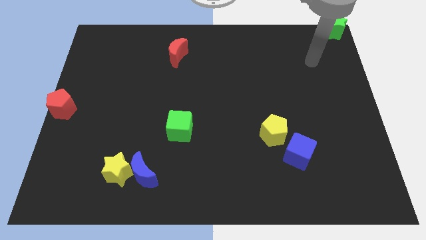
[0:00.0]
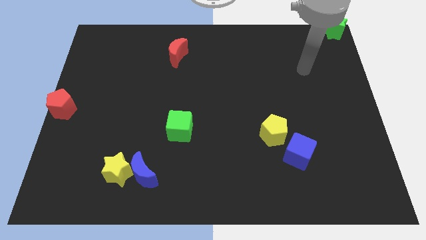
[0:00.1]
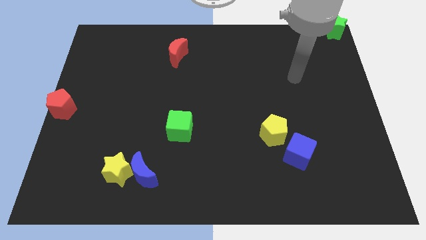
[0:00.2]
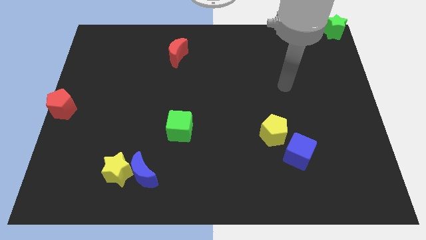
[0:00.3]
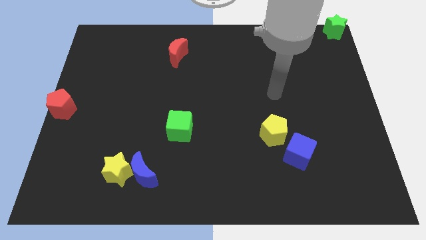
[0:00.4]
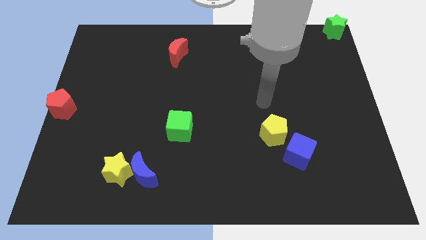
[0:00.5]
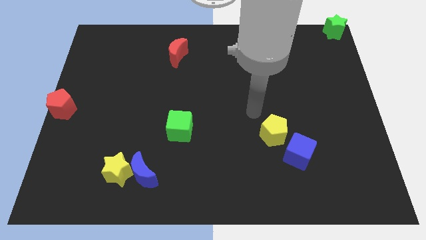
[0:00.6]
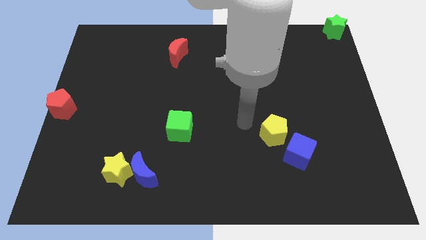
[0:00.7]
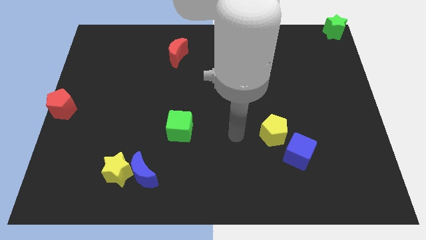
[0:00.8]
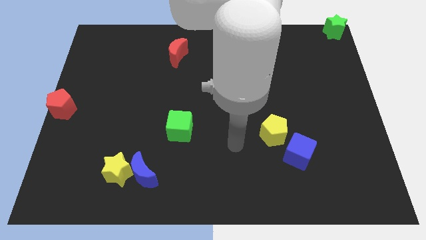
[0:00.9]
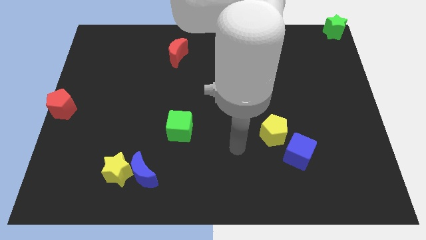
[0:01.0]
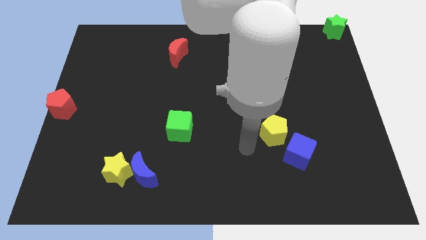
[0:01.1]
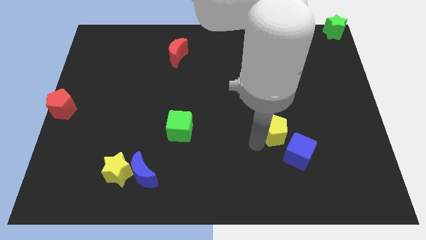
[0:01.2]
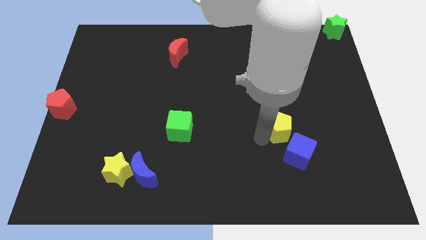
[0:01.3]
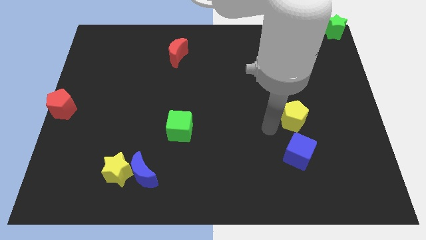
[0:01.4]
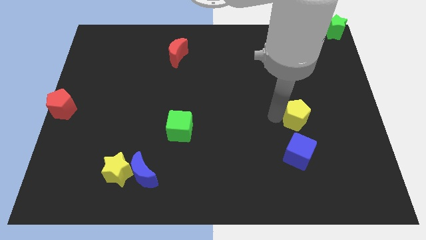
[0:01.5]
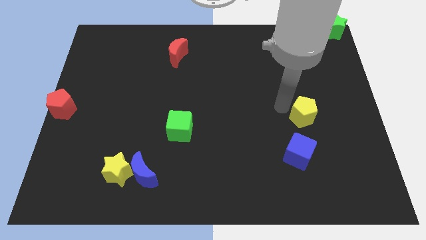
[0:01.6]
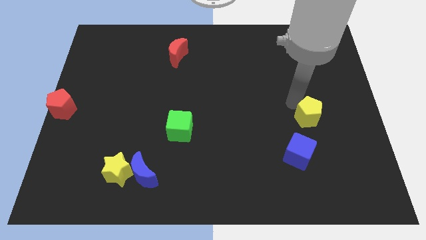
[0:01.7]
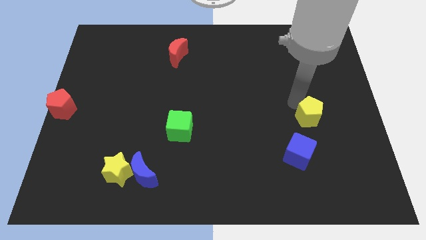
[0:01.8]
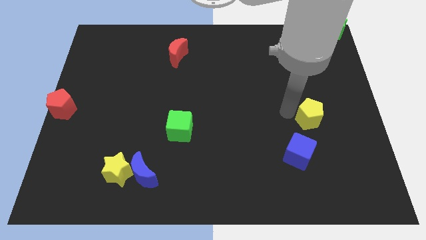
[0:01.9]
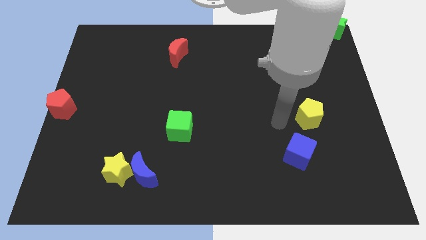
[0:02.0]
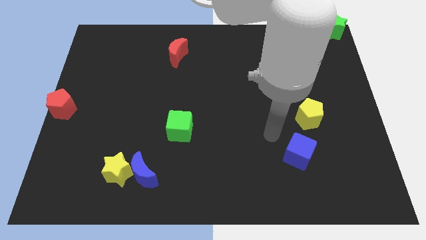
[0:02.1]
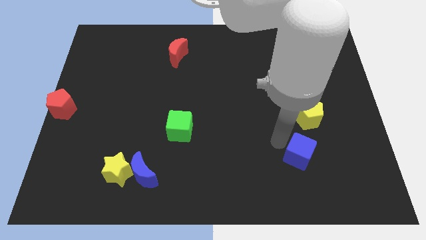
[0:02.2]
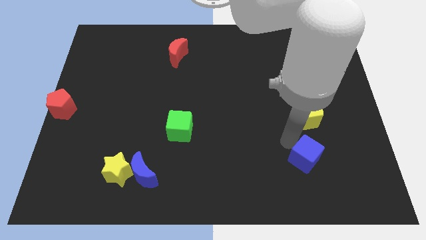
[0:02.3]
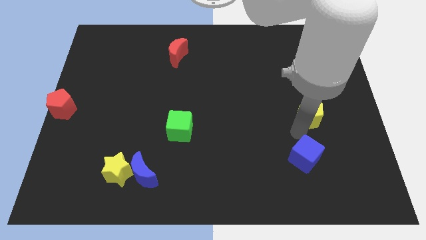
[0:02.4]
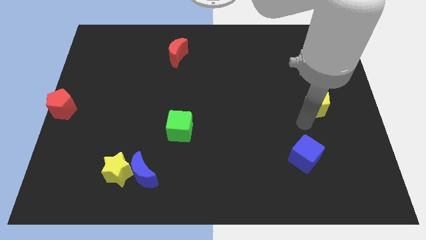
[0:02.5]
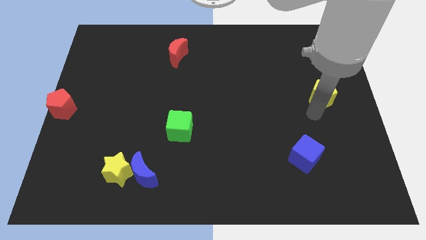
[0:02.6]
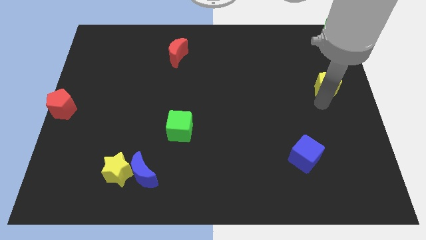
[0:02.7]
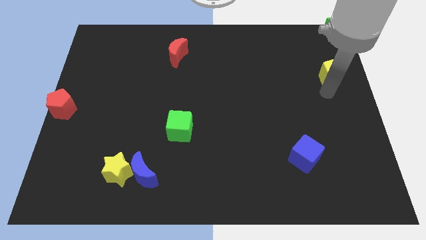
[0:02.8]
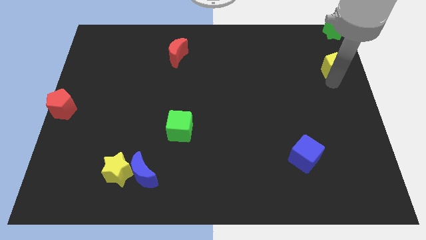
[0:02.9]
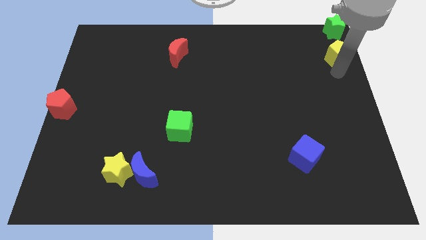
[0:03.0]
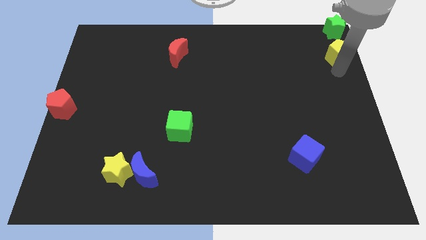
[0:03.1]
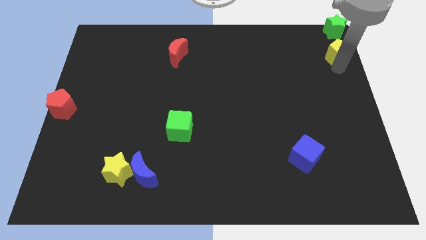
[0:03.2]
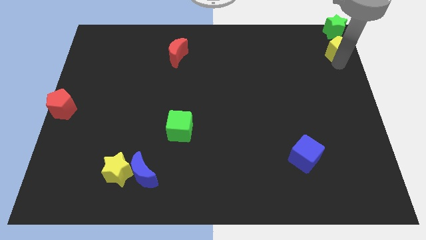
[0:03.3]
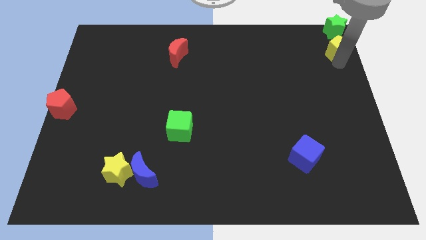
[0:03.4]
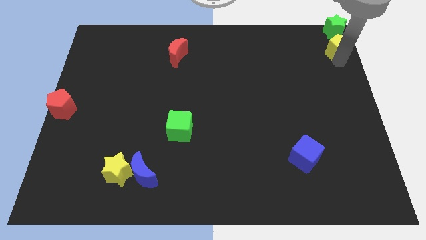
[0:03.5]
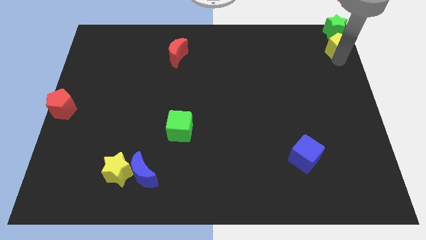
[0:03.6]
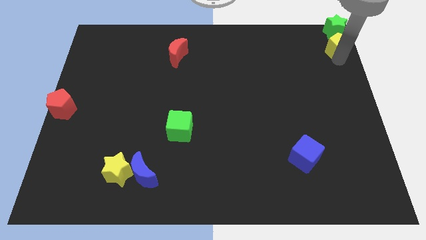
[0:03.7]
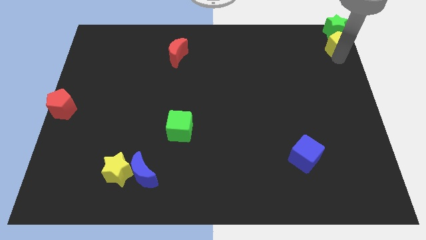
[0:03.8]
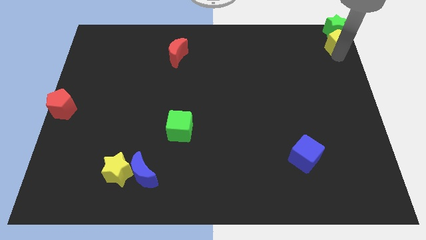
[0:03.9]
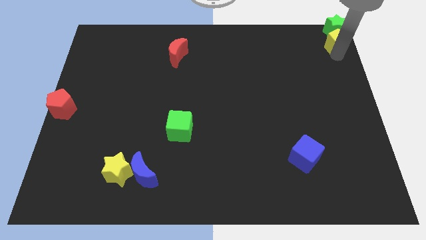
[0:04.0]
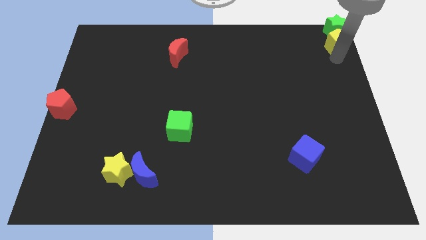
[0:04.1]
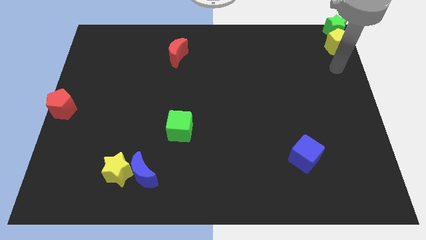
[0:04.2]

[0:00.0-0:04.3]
slide the yellow pentagon to the bottom side of the green star

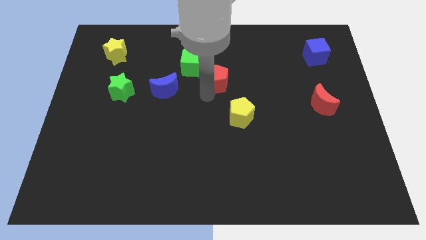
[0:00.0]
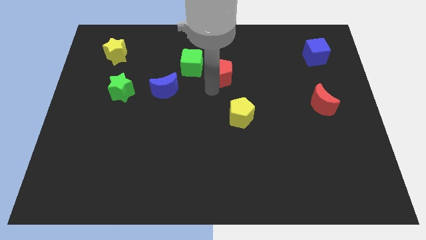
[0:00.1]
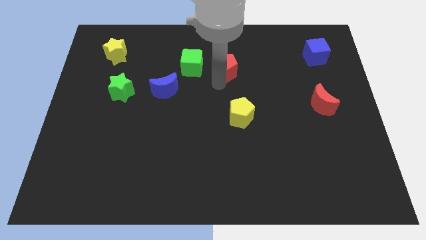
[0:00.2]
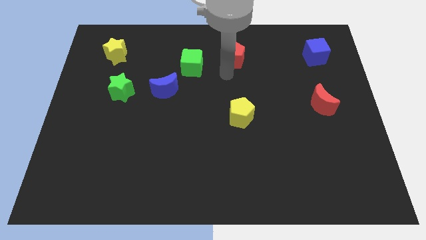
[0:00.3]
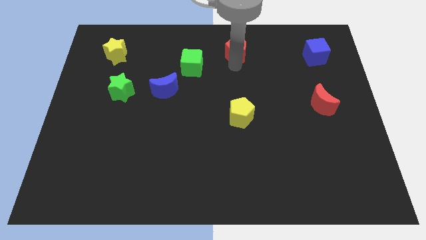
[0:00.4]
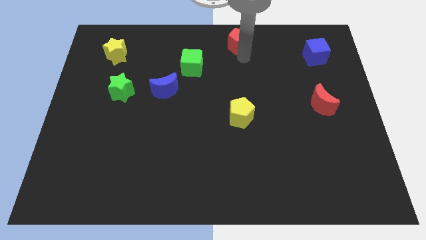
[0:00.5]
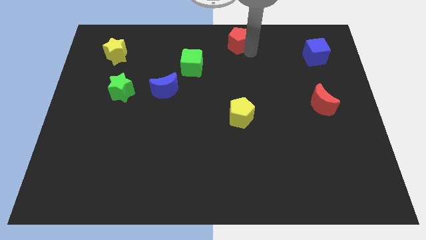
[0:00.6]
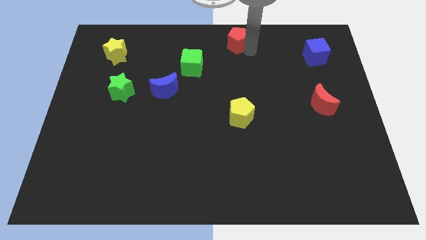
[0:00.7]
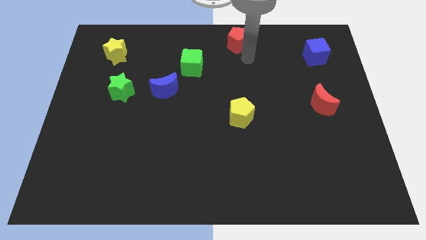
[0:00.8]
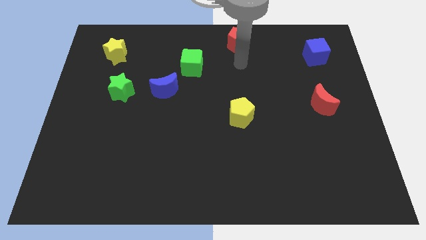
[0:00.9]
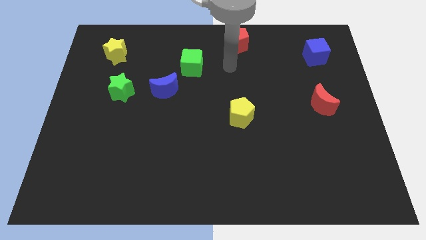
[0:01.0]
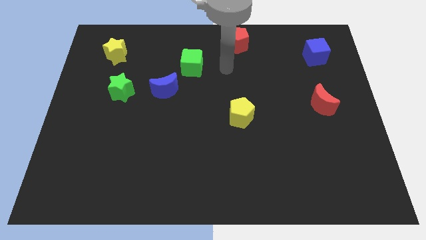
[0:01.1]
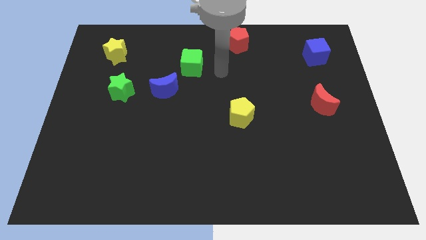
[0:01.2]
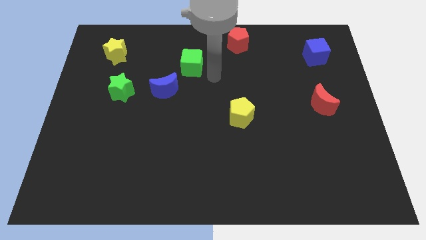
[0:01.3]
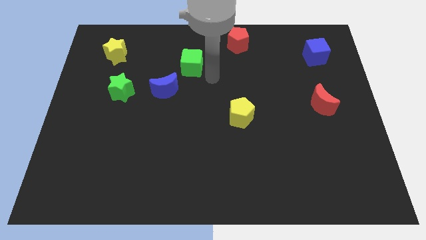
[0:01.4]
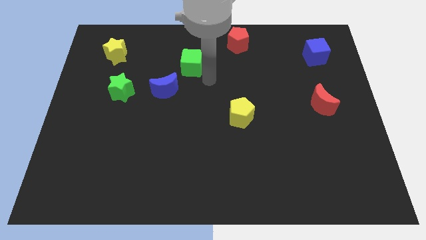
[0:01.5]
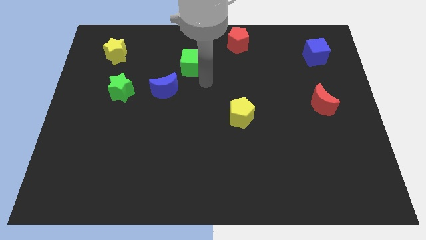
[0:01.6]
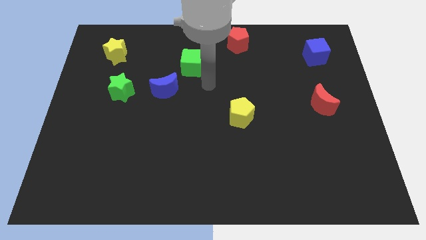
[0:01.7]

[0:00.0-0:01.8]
move the red pentagon vertically above the yellow pentagon

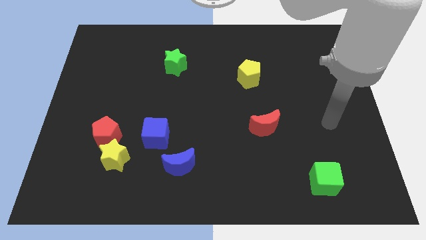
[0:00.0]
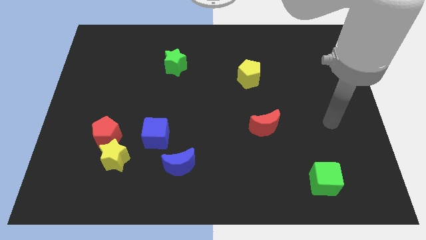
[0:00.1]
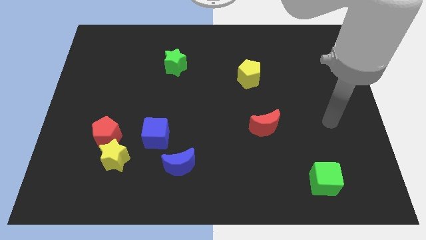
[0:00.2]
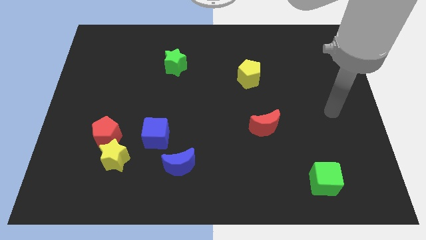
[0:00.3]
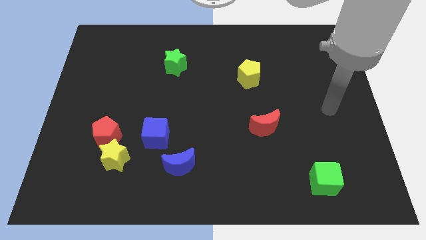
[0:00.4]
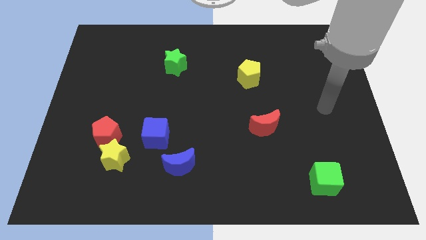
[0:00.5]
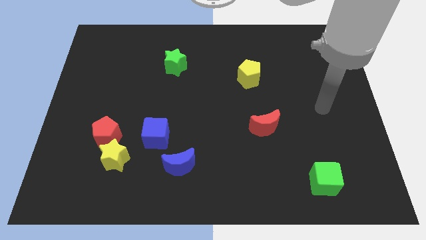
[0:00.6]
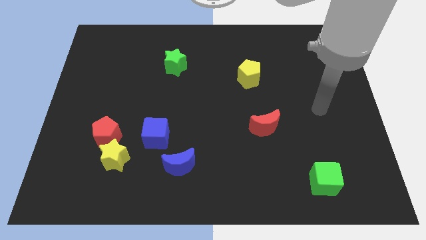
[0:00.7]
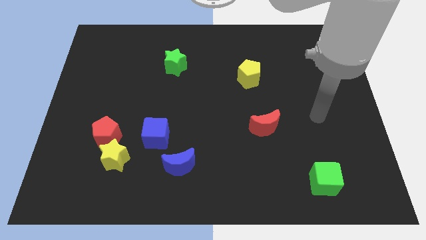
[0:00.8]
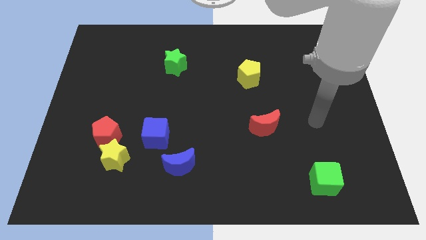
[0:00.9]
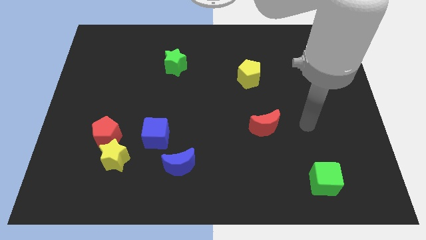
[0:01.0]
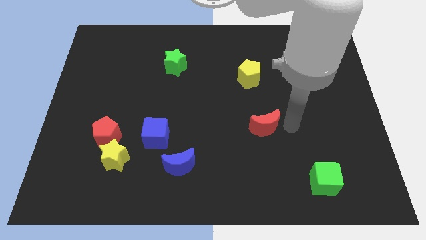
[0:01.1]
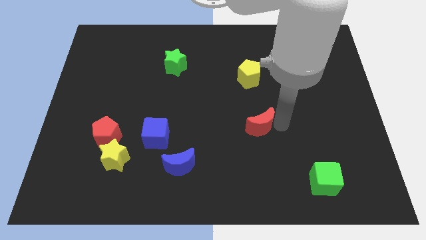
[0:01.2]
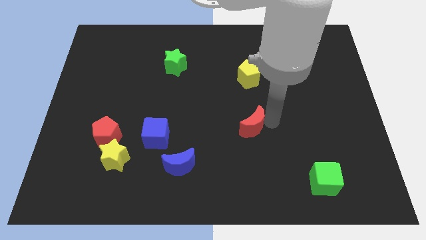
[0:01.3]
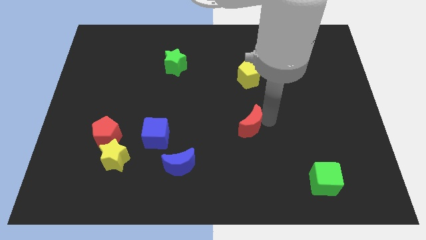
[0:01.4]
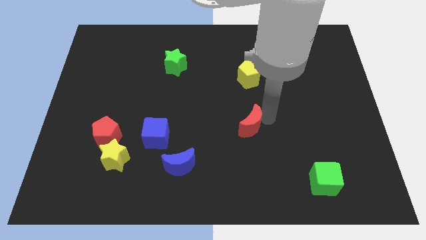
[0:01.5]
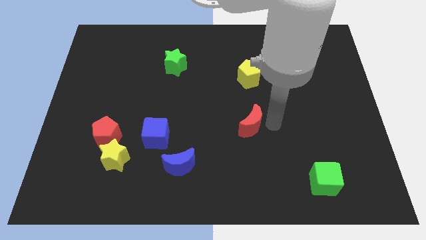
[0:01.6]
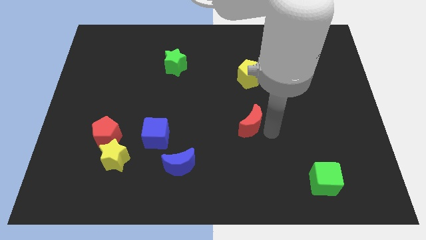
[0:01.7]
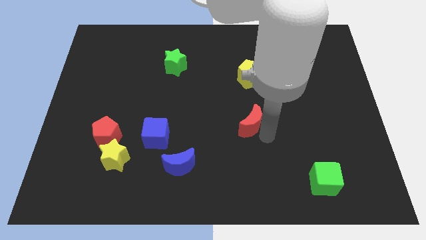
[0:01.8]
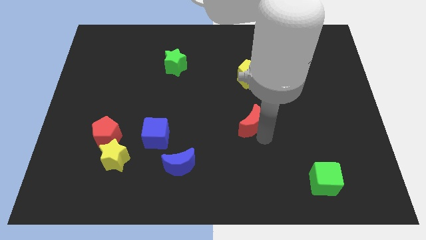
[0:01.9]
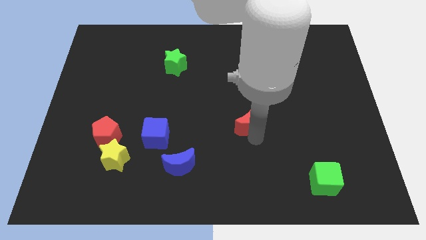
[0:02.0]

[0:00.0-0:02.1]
point your arm to the bottom of the red crescent

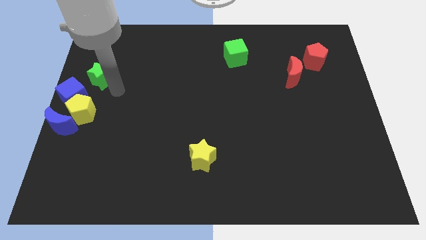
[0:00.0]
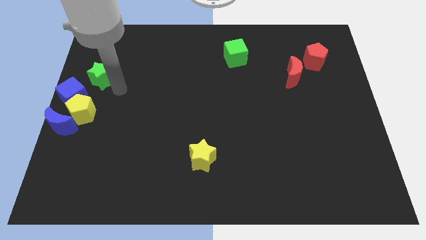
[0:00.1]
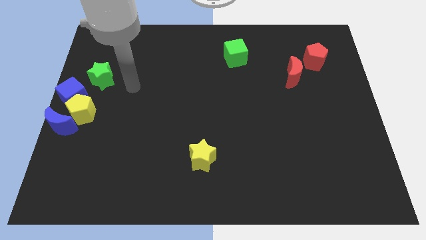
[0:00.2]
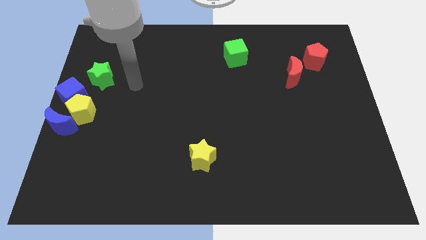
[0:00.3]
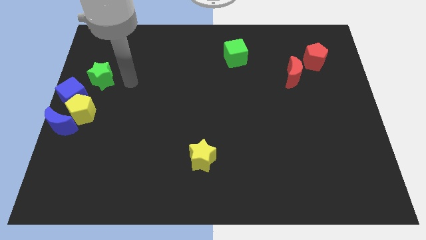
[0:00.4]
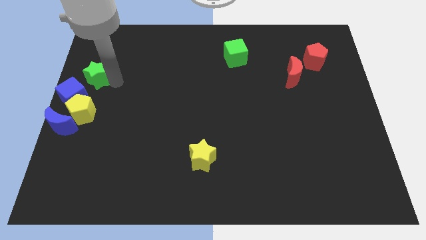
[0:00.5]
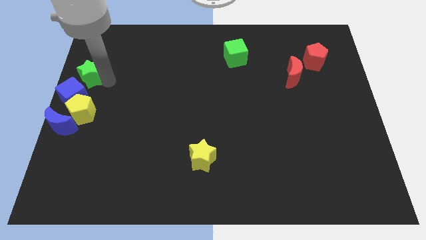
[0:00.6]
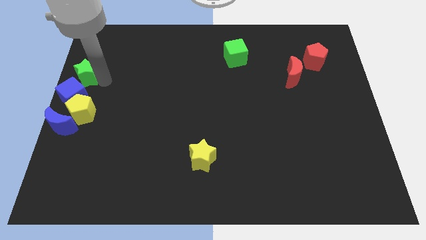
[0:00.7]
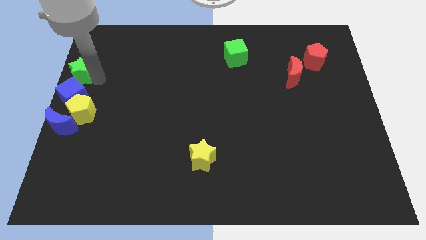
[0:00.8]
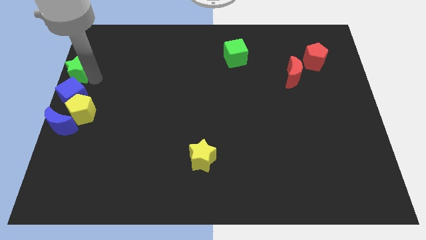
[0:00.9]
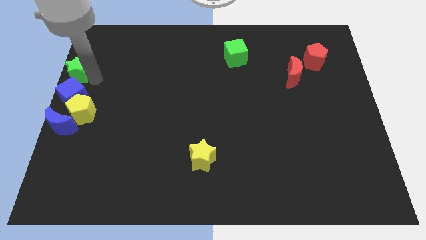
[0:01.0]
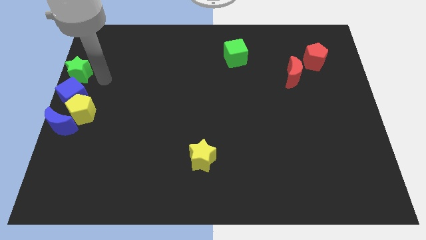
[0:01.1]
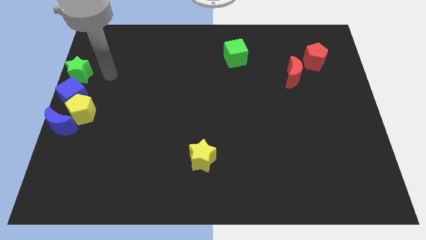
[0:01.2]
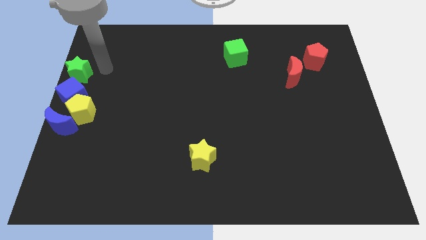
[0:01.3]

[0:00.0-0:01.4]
push the green star to the left center of the board
